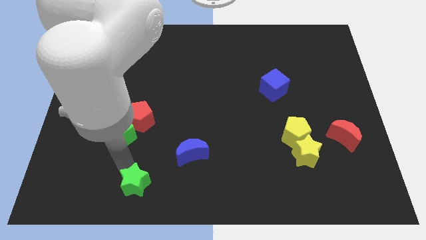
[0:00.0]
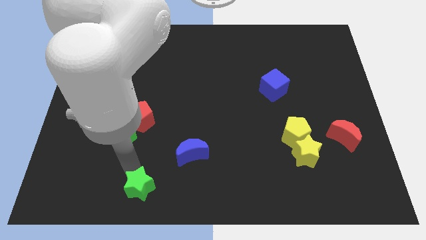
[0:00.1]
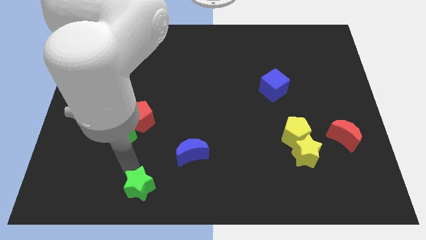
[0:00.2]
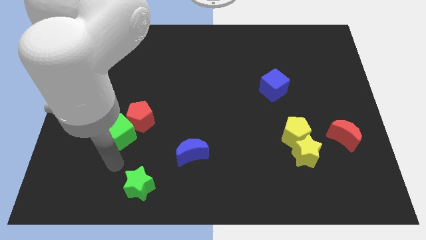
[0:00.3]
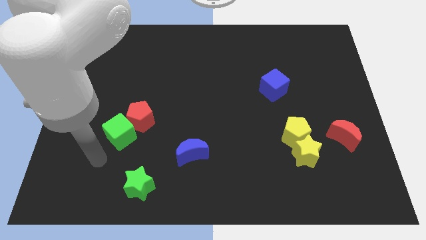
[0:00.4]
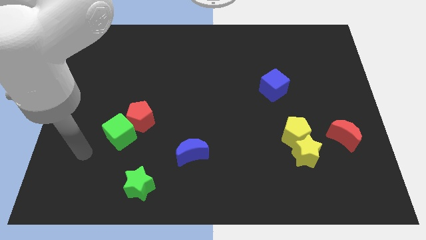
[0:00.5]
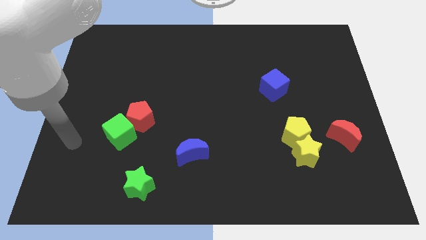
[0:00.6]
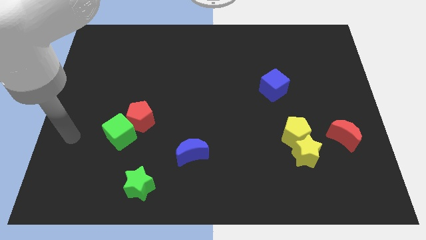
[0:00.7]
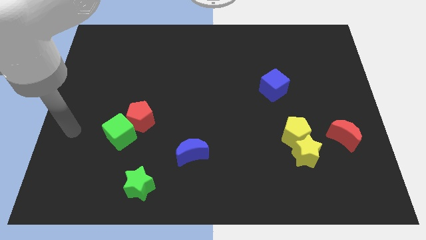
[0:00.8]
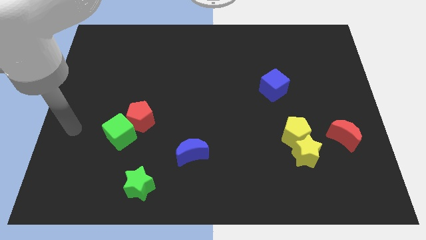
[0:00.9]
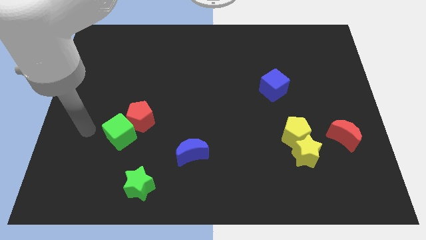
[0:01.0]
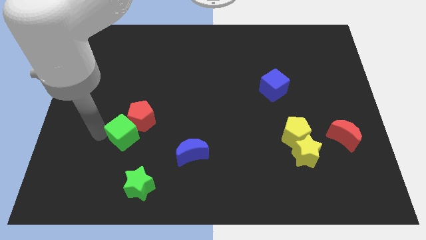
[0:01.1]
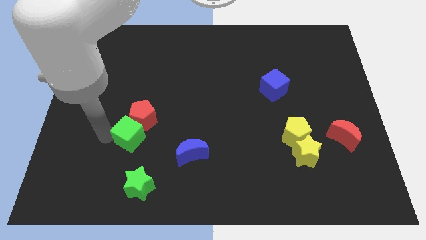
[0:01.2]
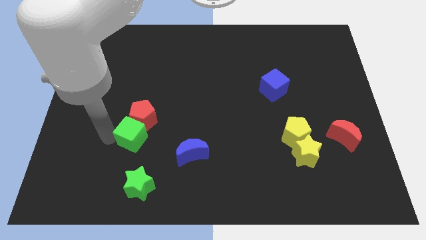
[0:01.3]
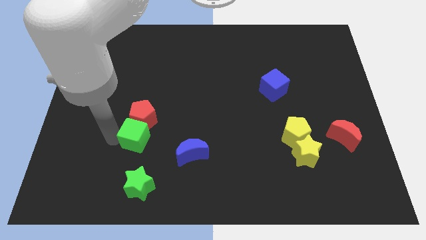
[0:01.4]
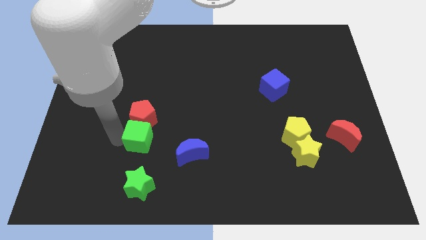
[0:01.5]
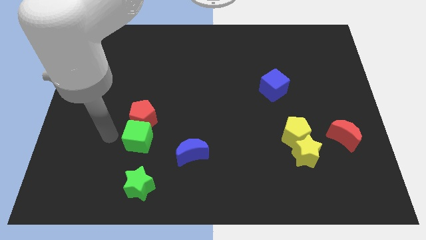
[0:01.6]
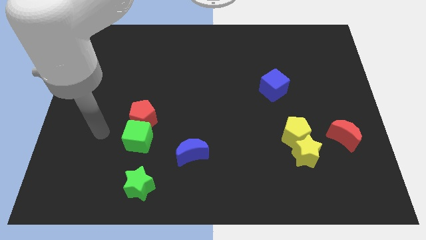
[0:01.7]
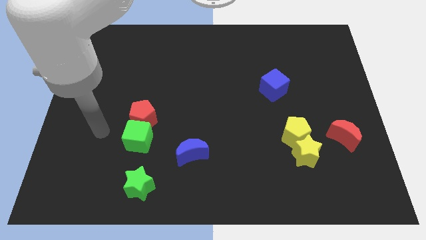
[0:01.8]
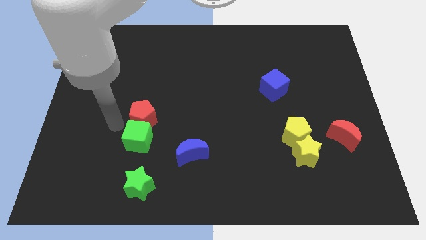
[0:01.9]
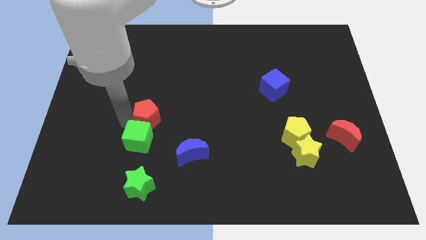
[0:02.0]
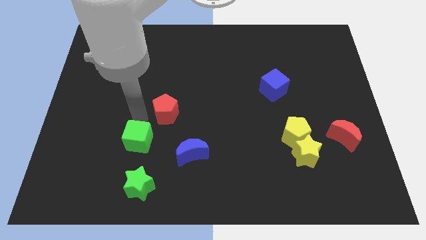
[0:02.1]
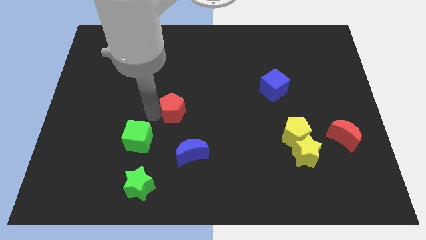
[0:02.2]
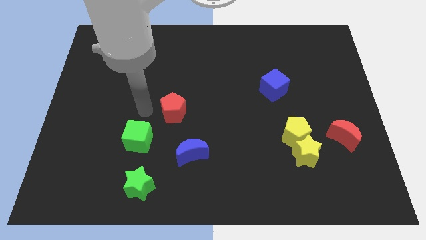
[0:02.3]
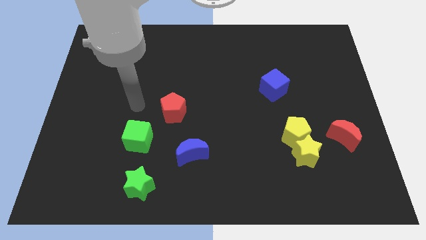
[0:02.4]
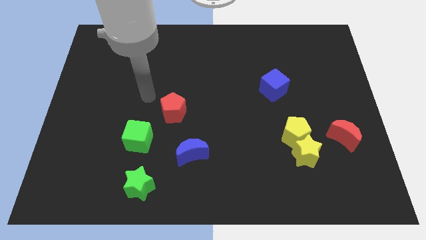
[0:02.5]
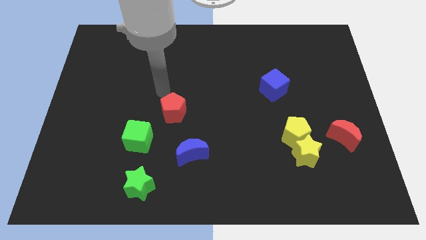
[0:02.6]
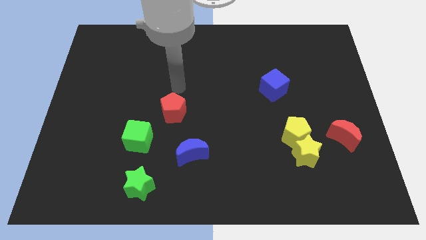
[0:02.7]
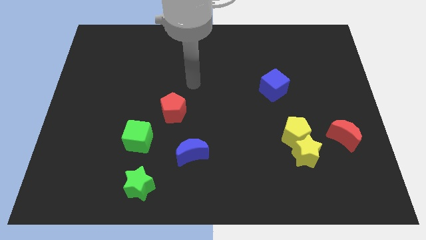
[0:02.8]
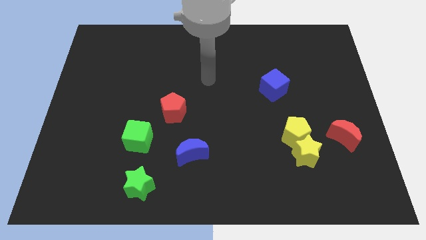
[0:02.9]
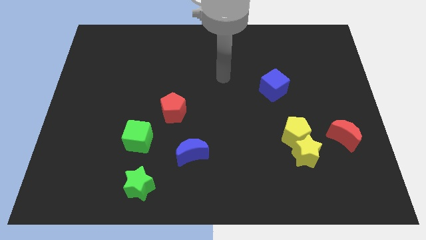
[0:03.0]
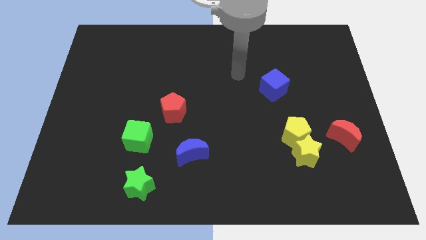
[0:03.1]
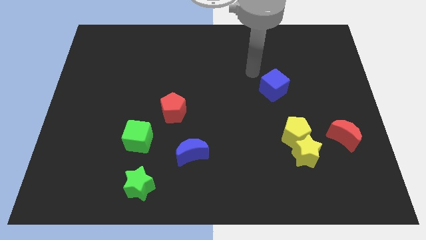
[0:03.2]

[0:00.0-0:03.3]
separate red pentagon from green cube

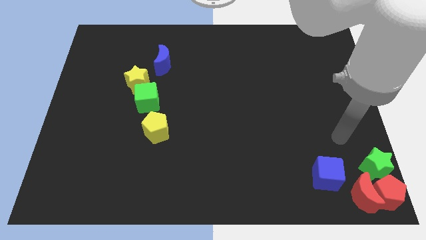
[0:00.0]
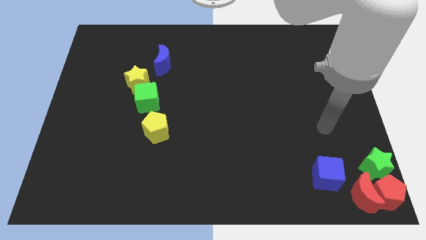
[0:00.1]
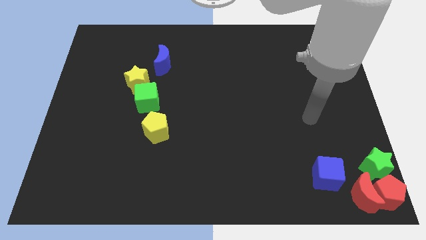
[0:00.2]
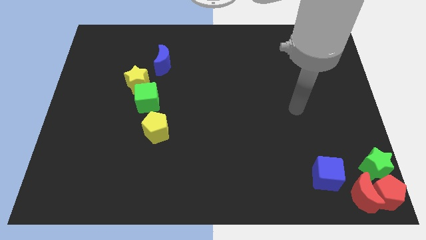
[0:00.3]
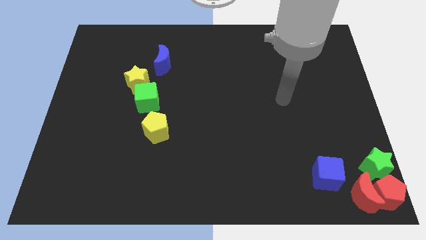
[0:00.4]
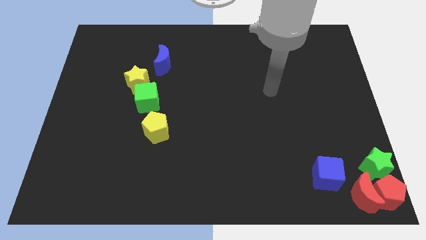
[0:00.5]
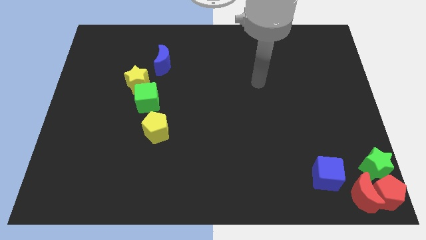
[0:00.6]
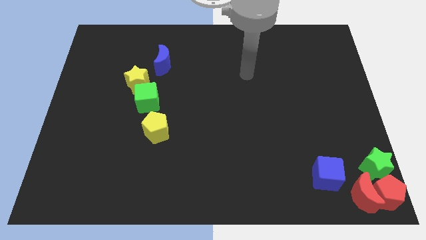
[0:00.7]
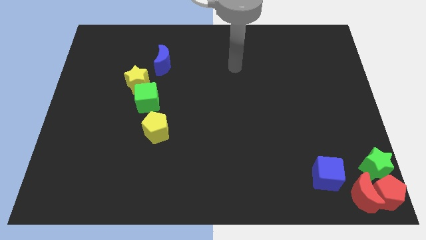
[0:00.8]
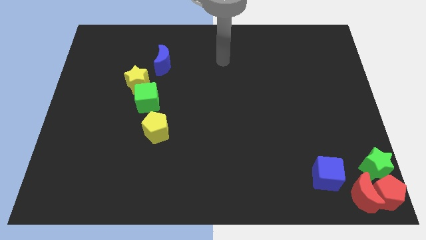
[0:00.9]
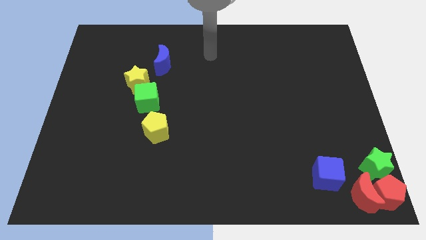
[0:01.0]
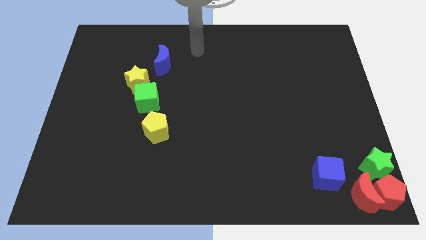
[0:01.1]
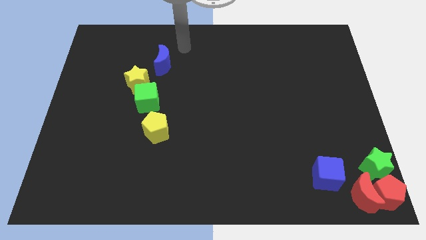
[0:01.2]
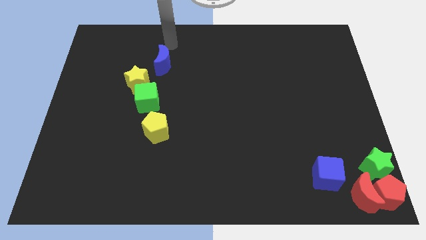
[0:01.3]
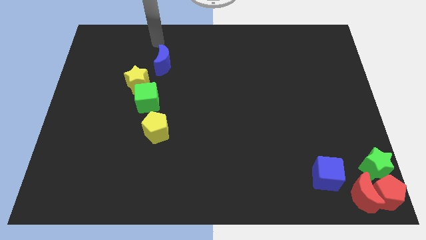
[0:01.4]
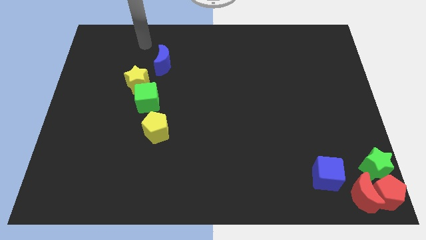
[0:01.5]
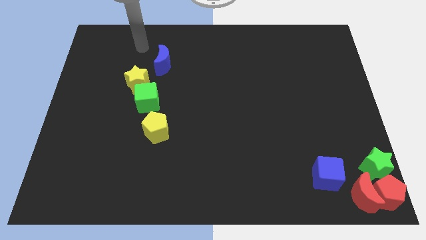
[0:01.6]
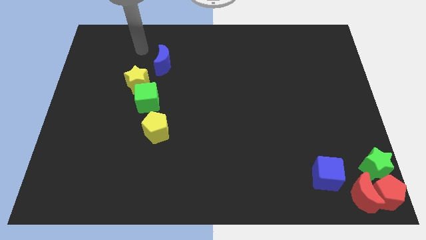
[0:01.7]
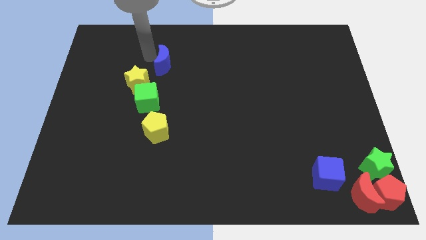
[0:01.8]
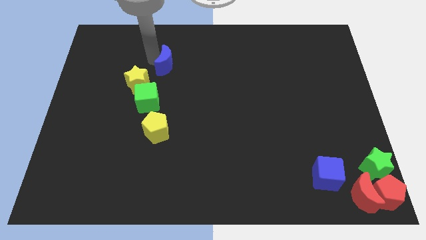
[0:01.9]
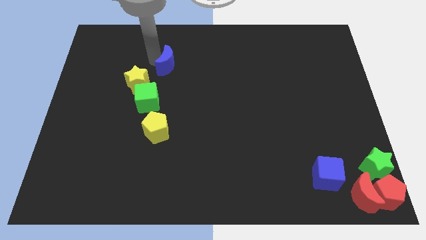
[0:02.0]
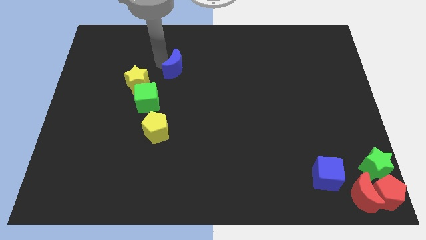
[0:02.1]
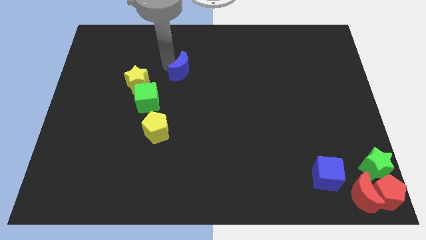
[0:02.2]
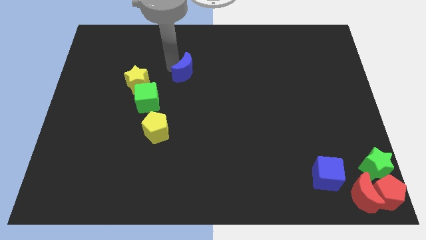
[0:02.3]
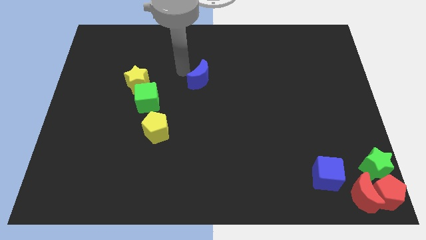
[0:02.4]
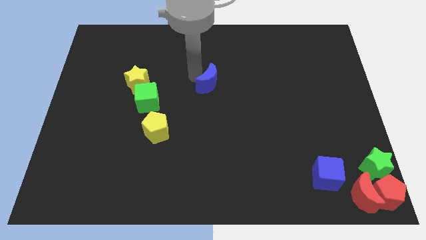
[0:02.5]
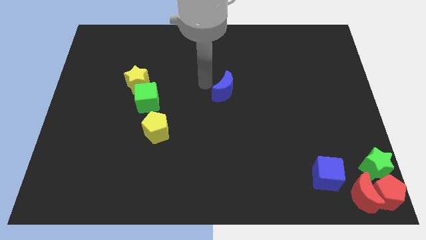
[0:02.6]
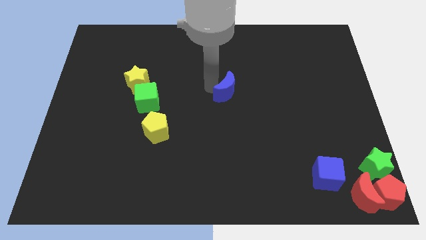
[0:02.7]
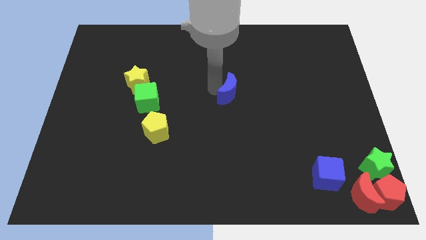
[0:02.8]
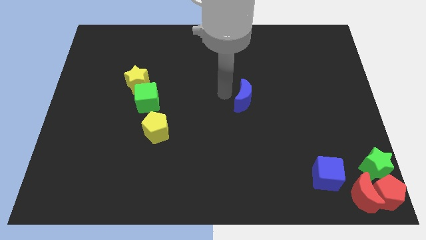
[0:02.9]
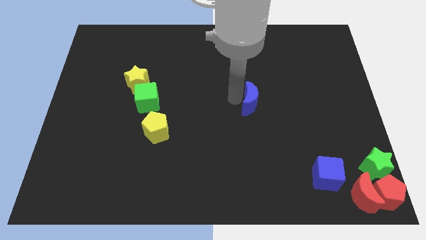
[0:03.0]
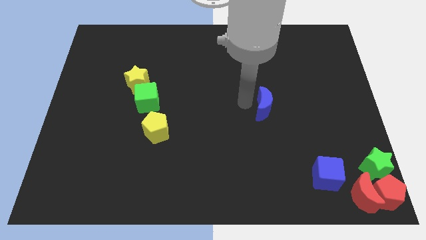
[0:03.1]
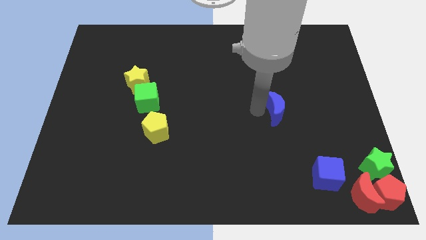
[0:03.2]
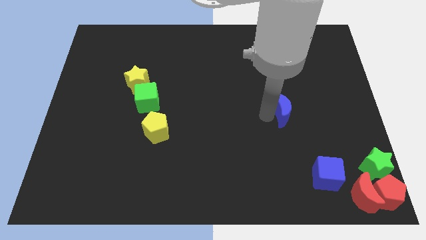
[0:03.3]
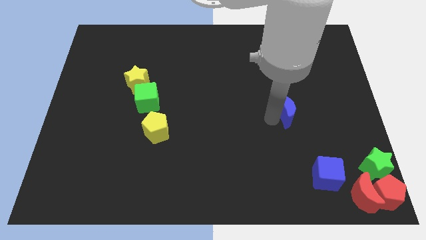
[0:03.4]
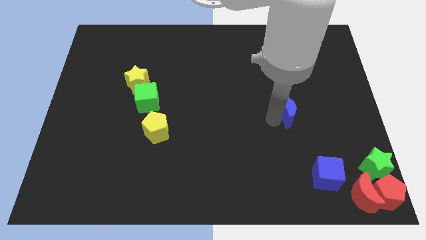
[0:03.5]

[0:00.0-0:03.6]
slide the blue crescen towards the group of blocks

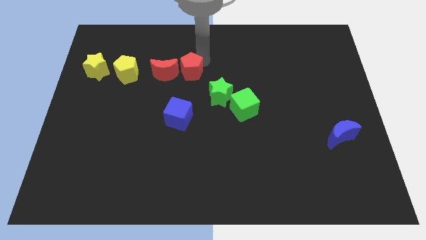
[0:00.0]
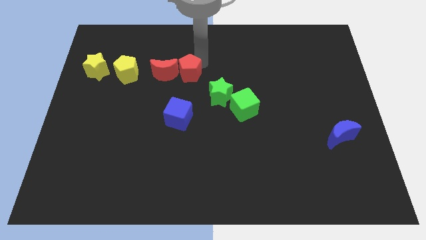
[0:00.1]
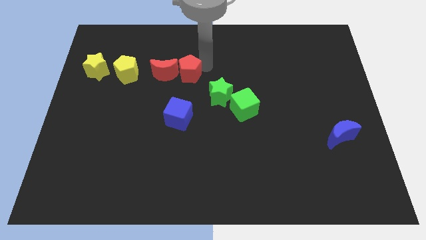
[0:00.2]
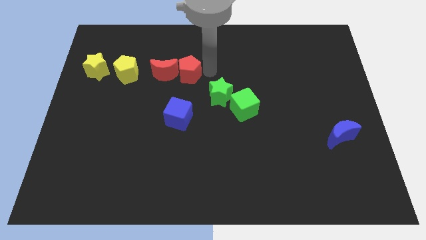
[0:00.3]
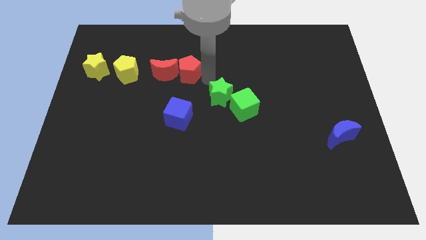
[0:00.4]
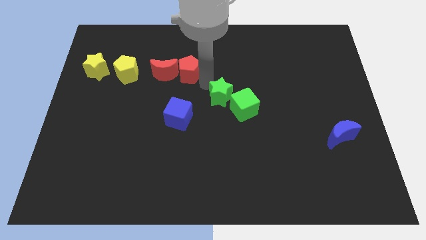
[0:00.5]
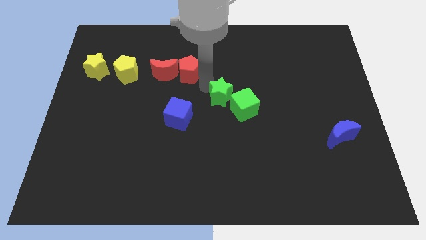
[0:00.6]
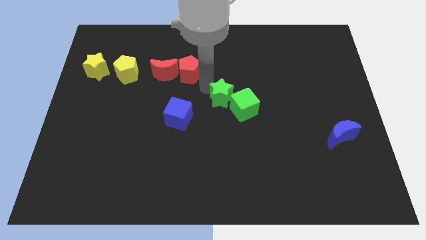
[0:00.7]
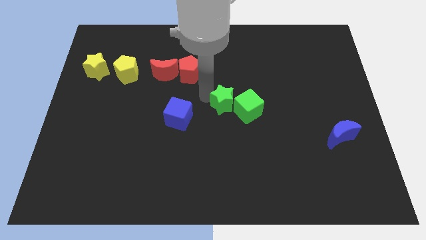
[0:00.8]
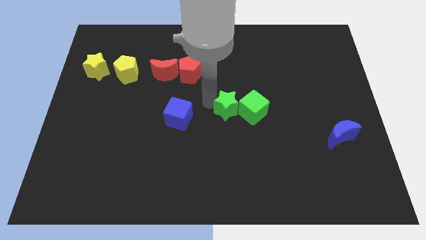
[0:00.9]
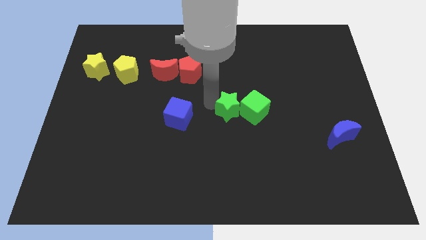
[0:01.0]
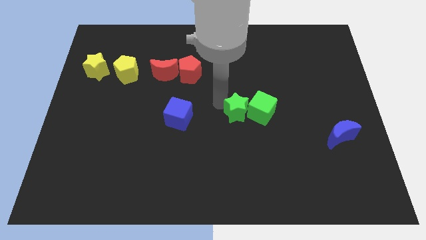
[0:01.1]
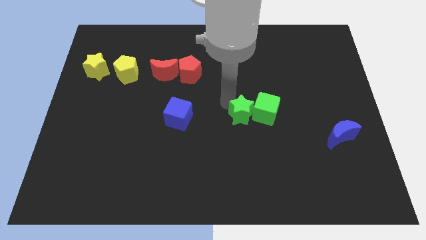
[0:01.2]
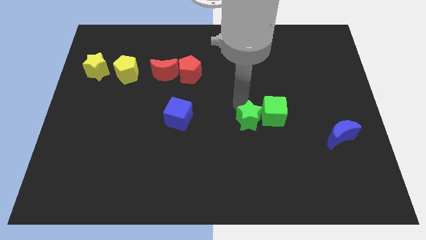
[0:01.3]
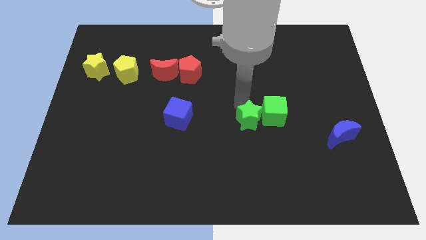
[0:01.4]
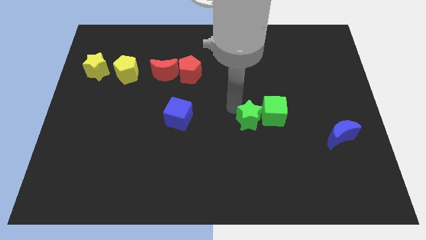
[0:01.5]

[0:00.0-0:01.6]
push the green cube along with green star towards the right side of the board

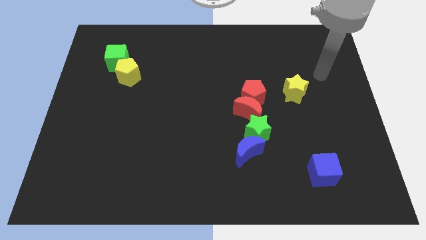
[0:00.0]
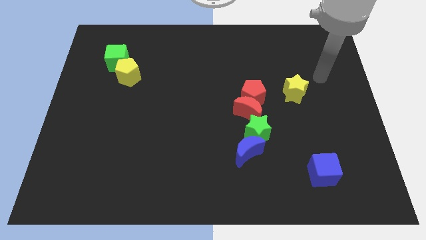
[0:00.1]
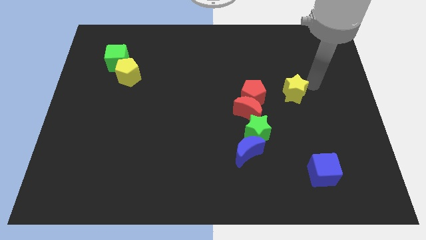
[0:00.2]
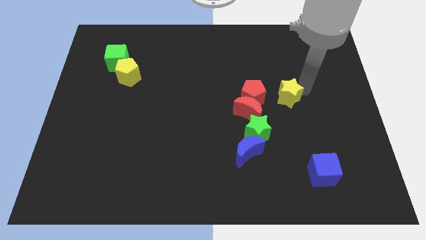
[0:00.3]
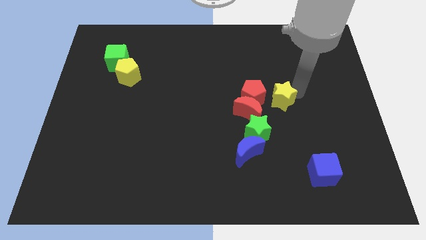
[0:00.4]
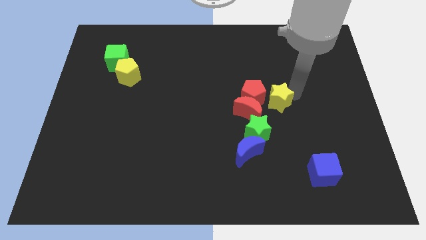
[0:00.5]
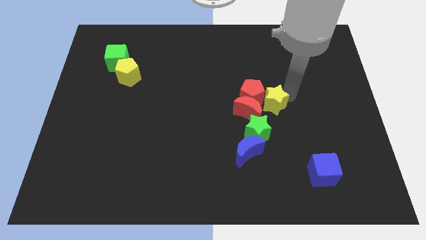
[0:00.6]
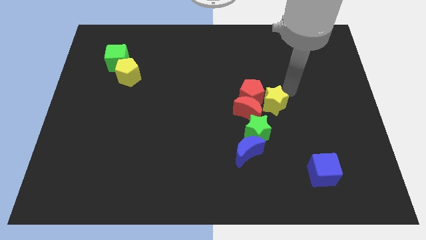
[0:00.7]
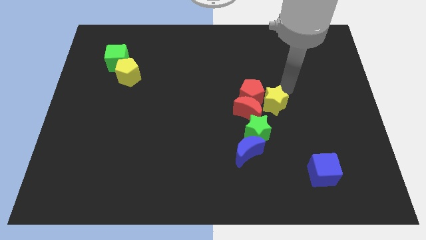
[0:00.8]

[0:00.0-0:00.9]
move the yellow star to the right of the red pentagon
